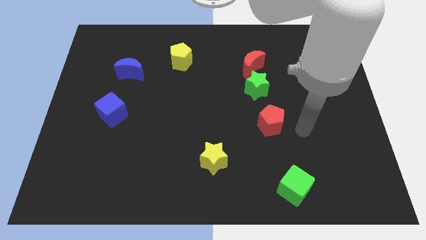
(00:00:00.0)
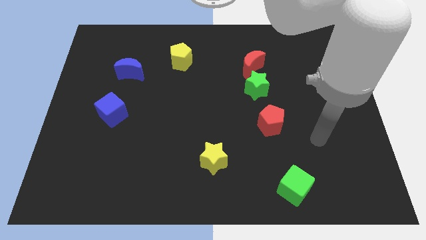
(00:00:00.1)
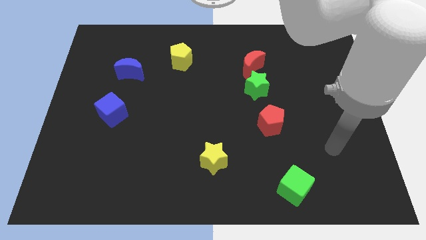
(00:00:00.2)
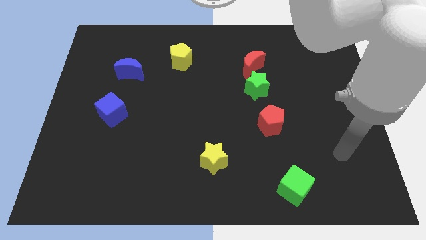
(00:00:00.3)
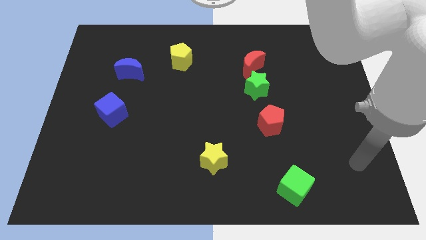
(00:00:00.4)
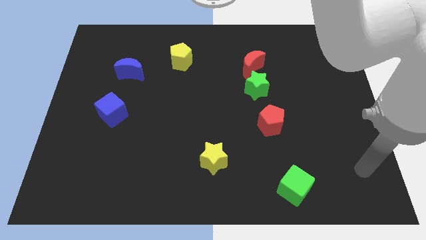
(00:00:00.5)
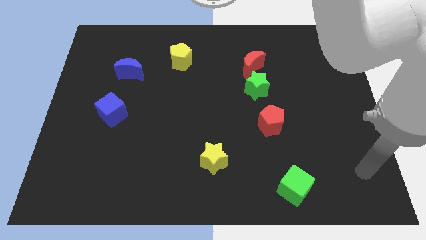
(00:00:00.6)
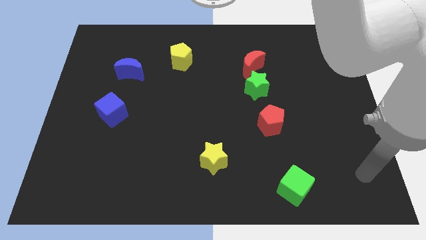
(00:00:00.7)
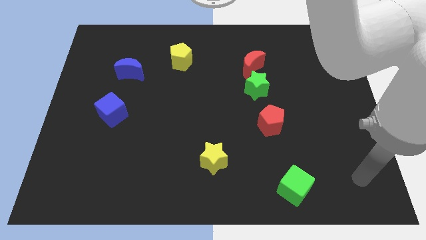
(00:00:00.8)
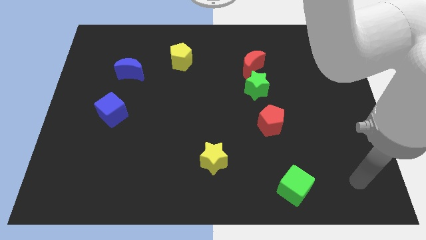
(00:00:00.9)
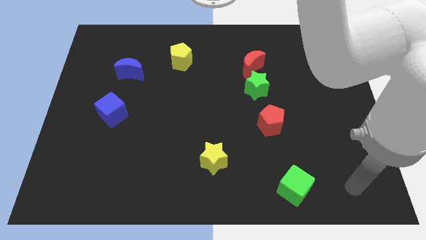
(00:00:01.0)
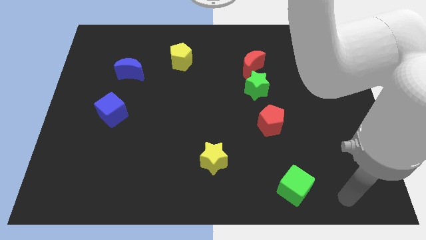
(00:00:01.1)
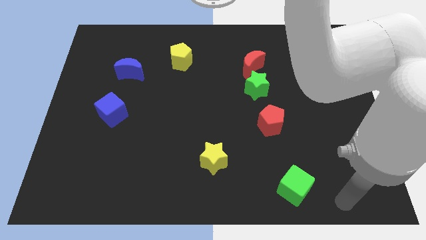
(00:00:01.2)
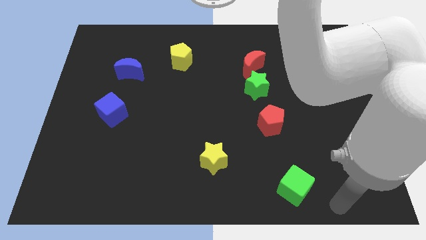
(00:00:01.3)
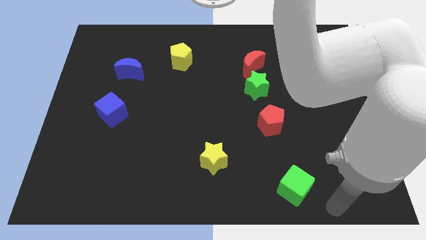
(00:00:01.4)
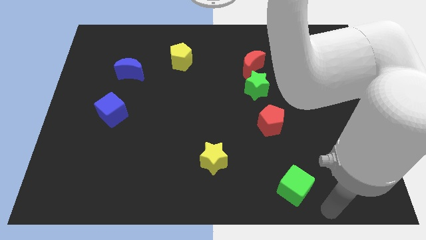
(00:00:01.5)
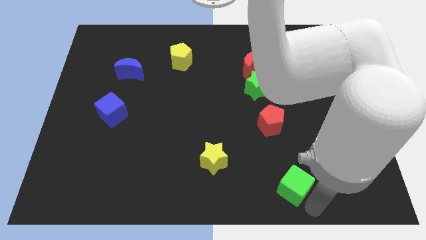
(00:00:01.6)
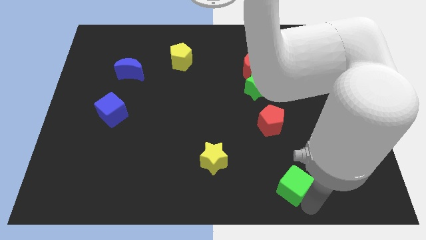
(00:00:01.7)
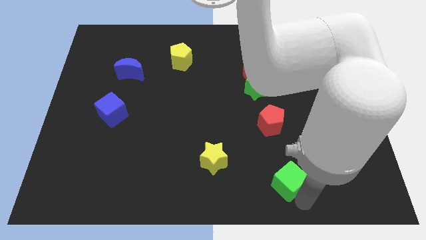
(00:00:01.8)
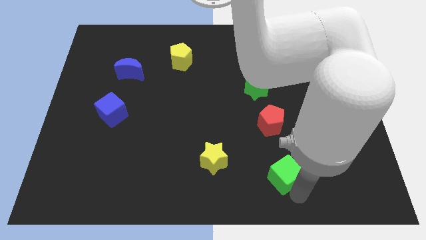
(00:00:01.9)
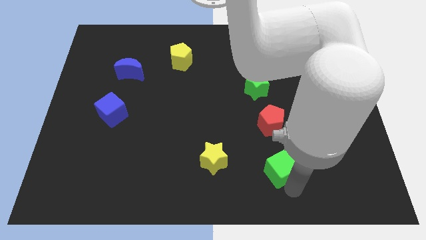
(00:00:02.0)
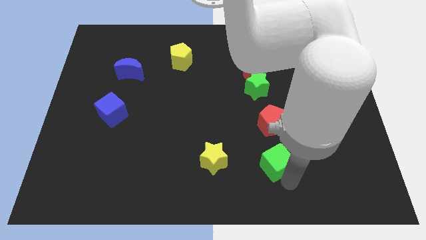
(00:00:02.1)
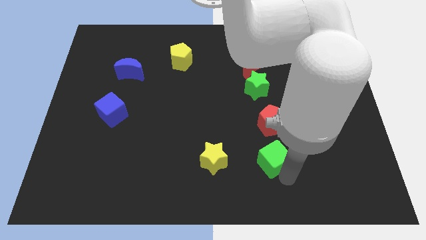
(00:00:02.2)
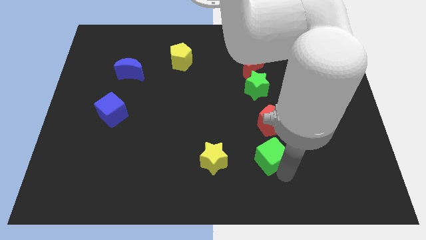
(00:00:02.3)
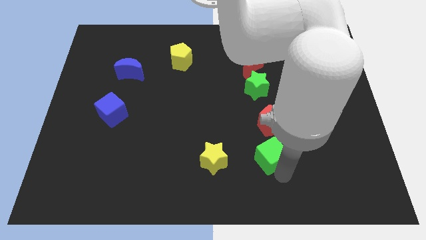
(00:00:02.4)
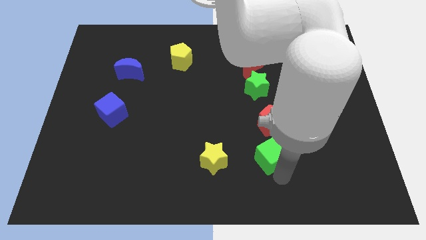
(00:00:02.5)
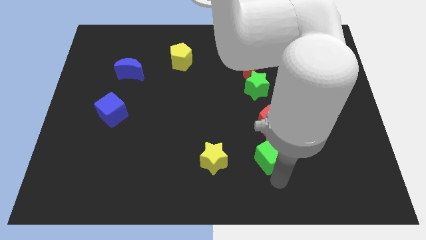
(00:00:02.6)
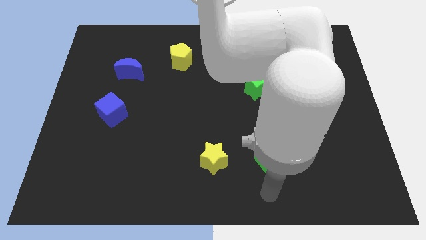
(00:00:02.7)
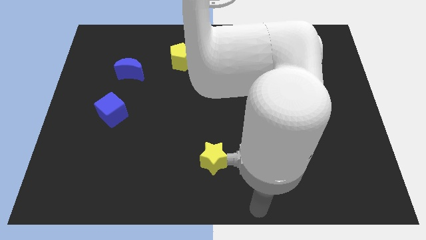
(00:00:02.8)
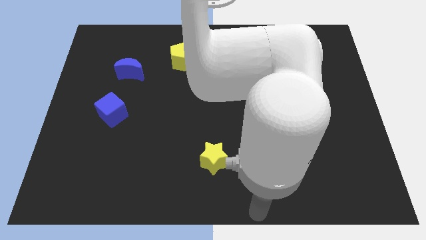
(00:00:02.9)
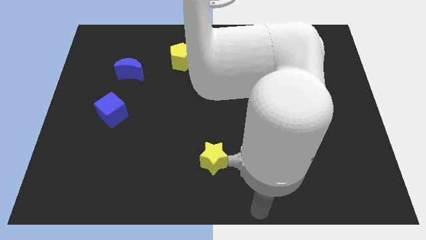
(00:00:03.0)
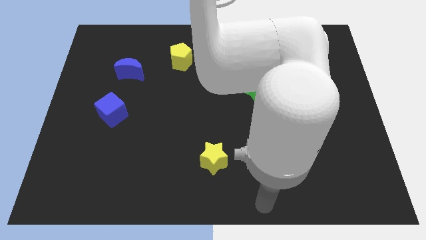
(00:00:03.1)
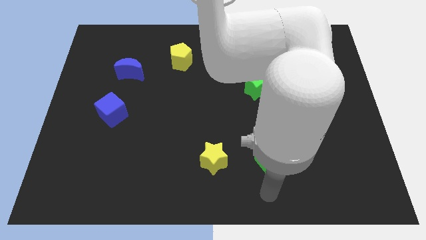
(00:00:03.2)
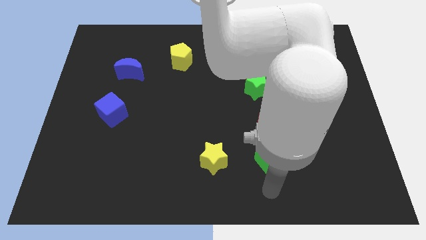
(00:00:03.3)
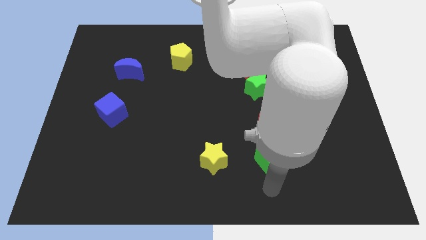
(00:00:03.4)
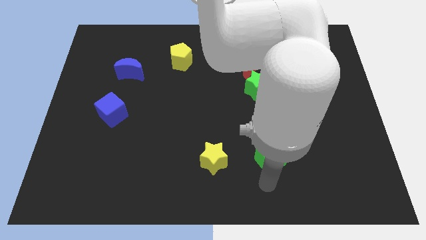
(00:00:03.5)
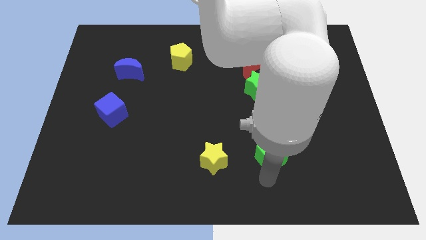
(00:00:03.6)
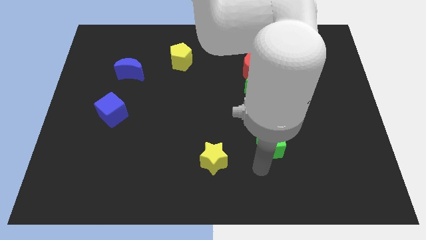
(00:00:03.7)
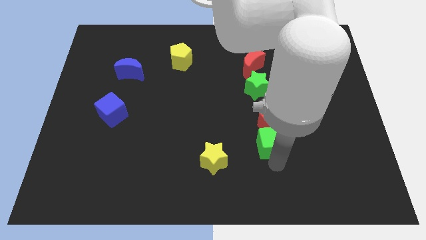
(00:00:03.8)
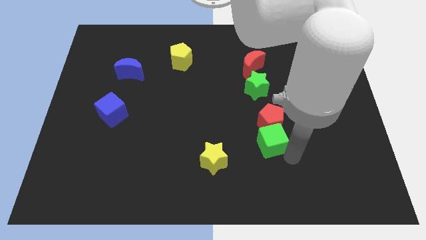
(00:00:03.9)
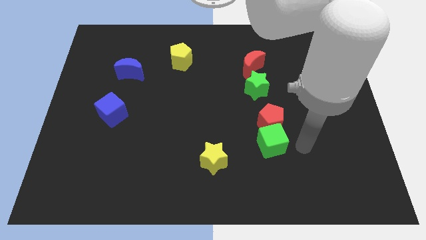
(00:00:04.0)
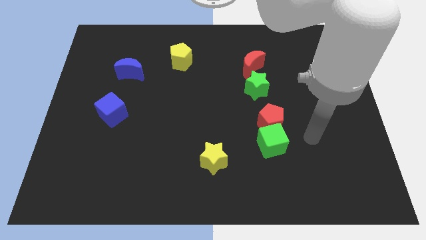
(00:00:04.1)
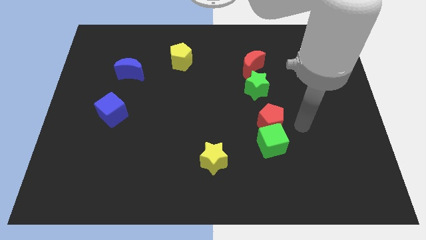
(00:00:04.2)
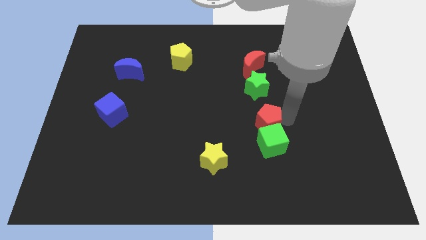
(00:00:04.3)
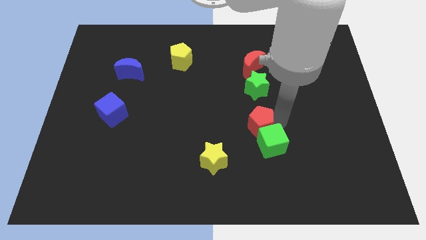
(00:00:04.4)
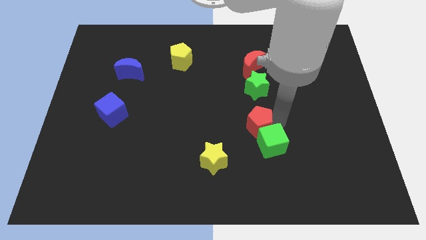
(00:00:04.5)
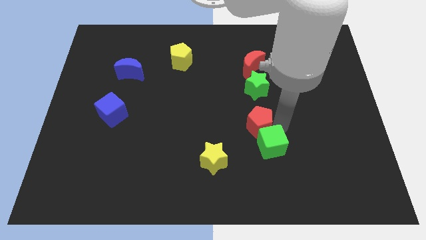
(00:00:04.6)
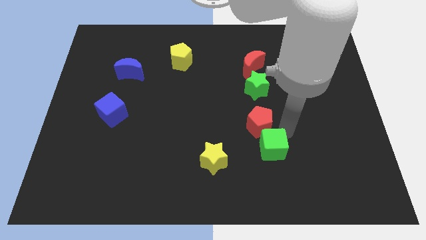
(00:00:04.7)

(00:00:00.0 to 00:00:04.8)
push green cube into the red pentagon

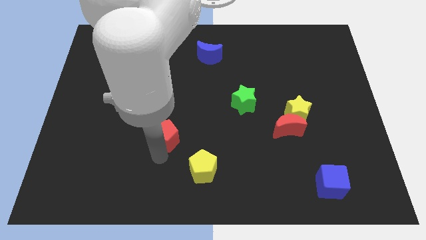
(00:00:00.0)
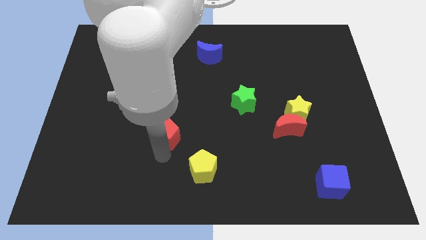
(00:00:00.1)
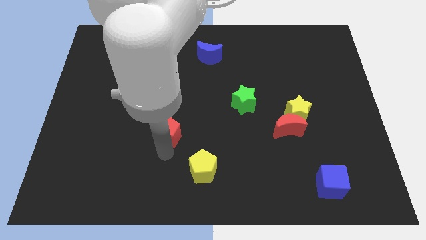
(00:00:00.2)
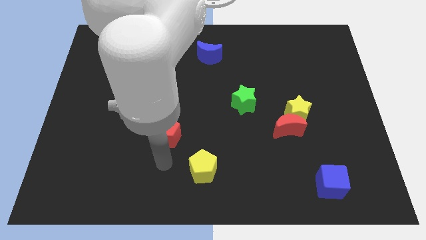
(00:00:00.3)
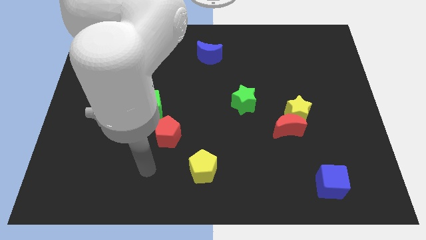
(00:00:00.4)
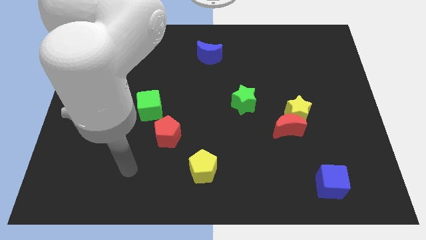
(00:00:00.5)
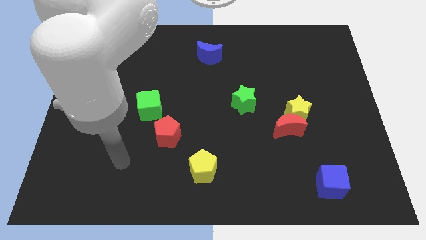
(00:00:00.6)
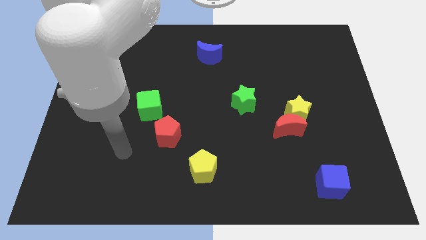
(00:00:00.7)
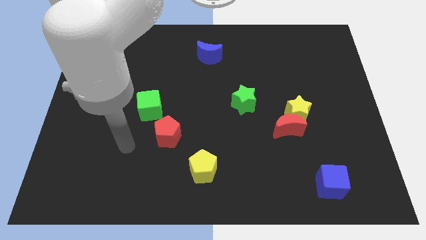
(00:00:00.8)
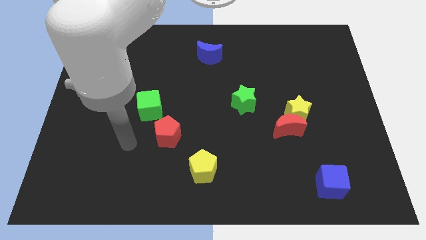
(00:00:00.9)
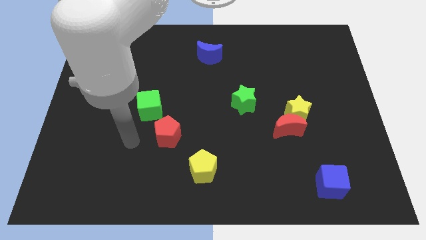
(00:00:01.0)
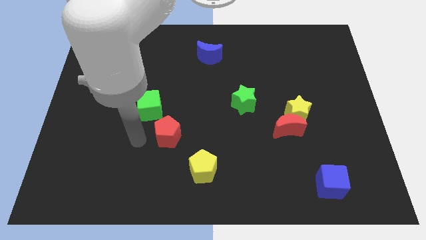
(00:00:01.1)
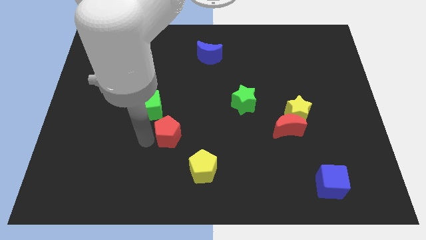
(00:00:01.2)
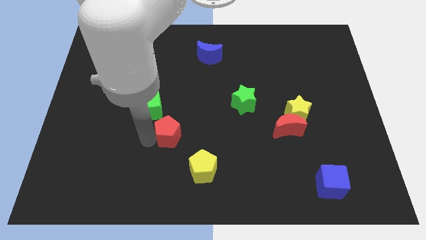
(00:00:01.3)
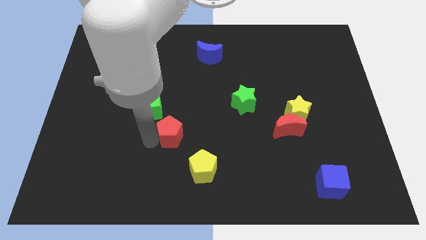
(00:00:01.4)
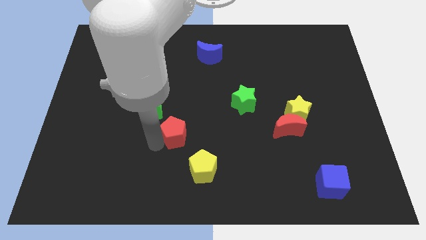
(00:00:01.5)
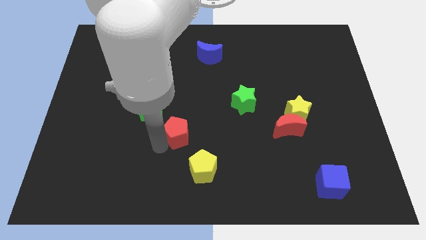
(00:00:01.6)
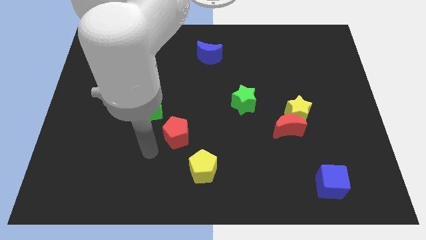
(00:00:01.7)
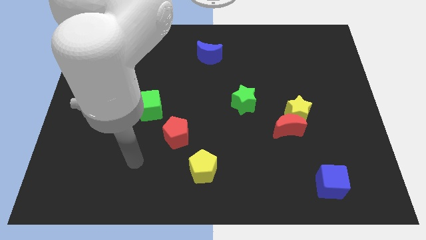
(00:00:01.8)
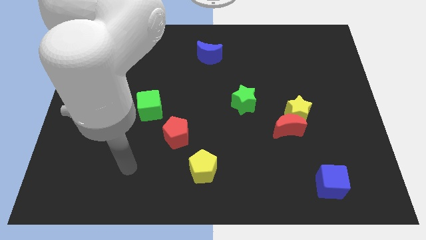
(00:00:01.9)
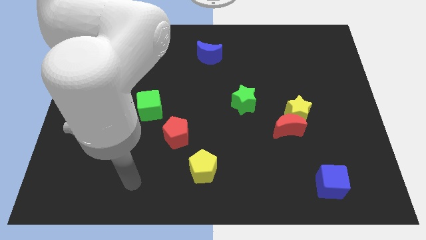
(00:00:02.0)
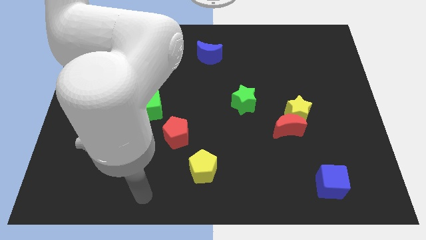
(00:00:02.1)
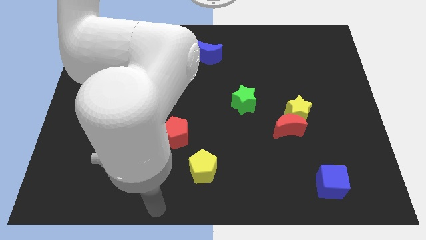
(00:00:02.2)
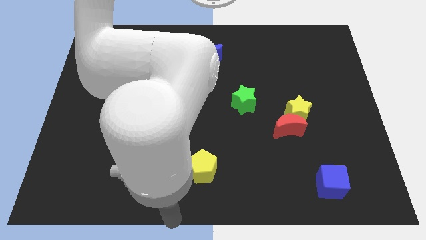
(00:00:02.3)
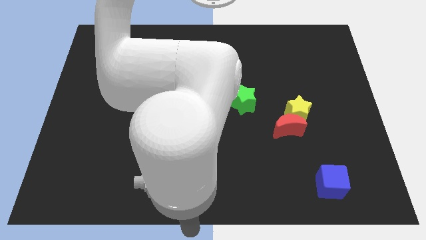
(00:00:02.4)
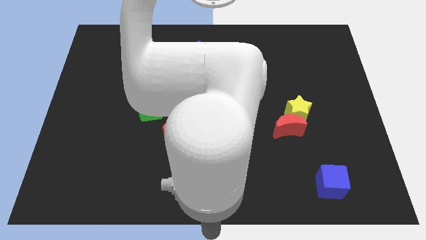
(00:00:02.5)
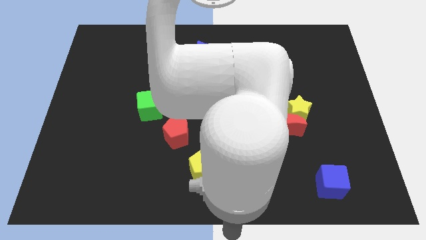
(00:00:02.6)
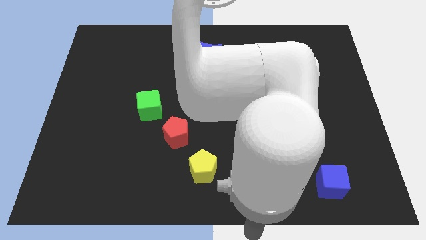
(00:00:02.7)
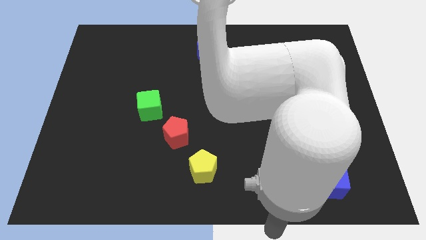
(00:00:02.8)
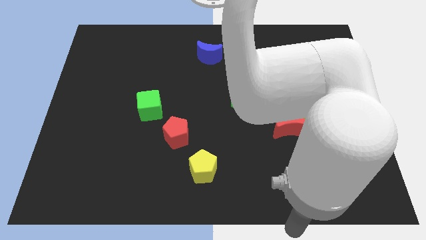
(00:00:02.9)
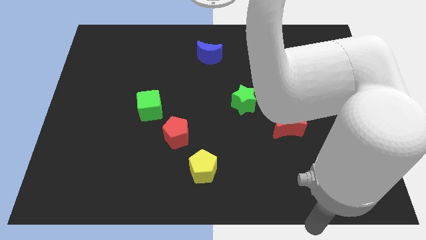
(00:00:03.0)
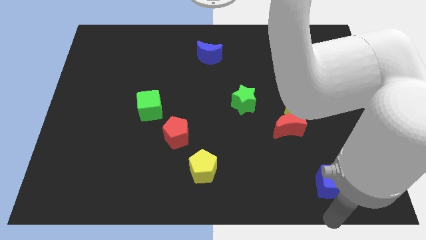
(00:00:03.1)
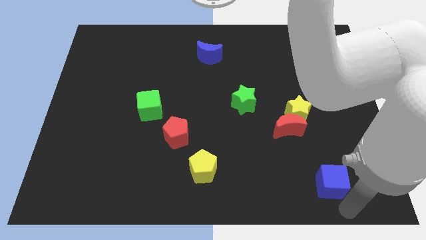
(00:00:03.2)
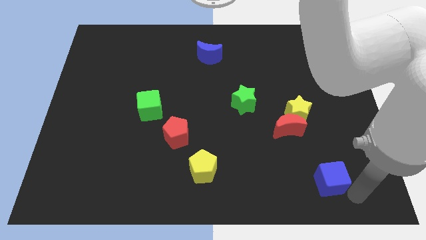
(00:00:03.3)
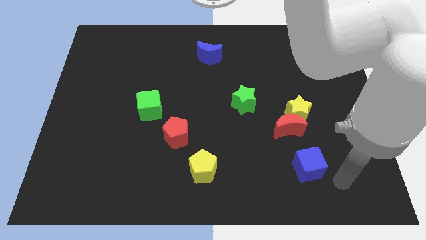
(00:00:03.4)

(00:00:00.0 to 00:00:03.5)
push the red pentagon between yellow pentagon and green cube

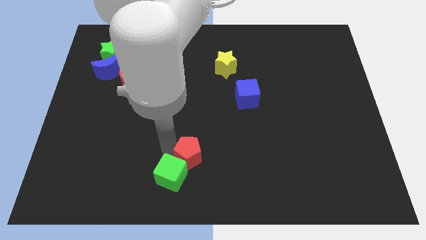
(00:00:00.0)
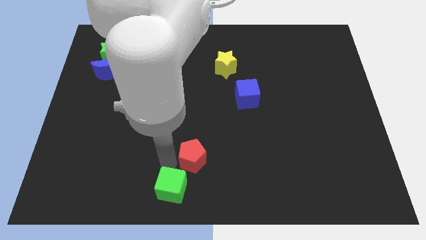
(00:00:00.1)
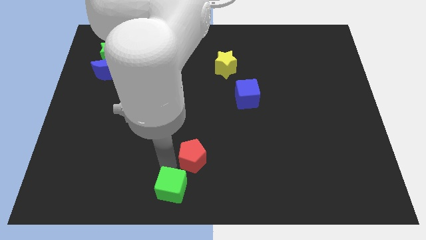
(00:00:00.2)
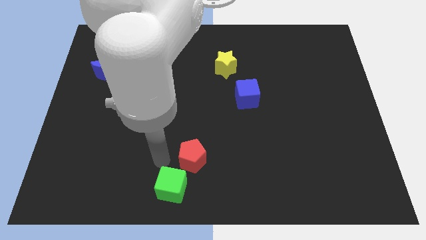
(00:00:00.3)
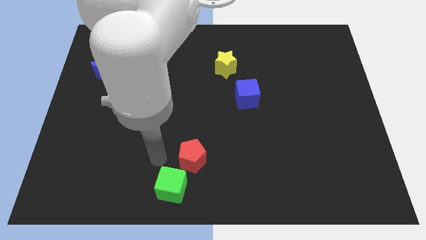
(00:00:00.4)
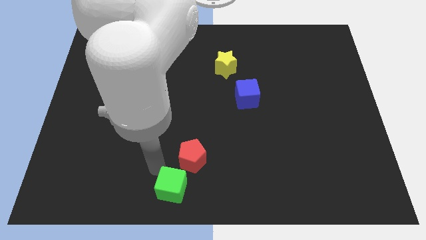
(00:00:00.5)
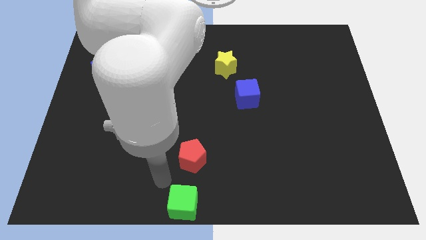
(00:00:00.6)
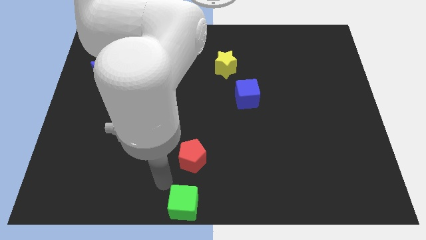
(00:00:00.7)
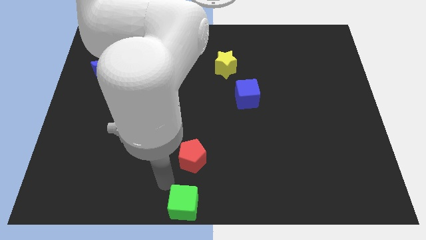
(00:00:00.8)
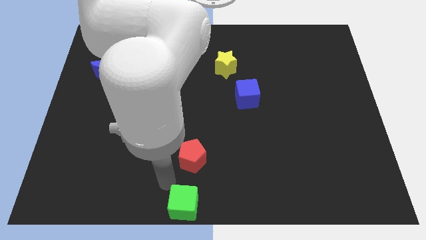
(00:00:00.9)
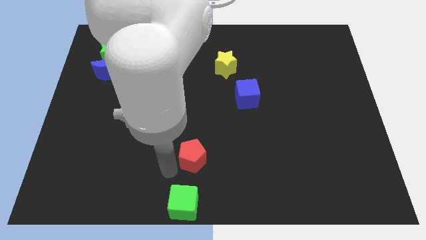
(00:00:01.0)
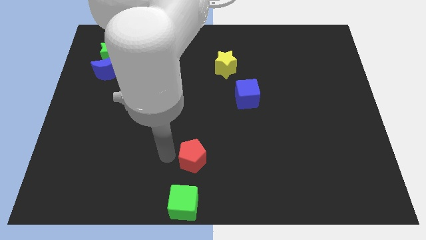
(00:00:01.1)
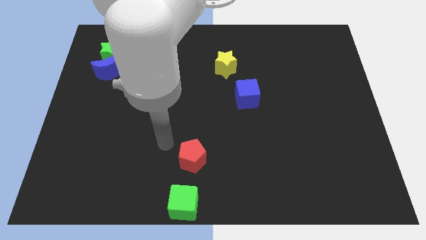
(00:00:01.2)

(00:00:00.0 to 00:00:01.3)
separate the green cube from the red pentagon
